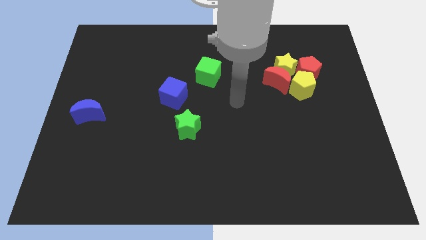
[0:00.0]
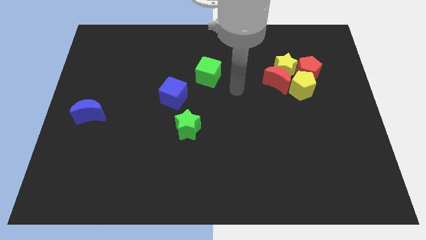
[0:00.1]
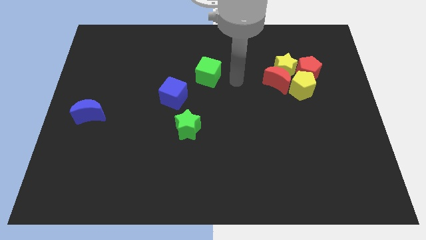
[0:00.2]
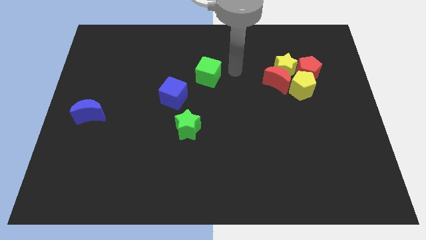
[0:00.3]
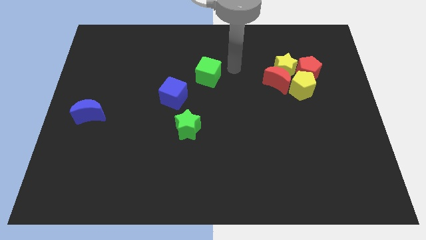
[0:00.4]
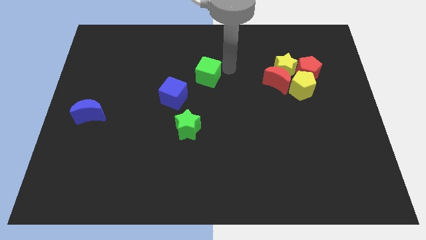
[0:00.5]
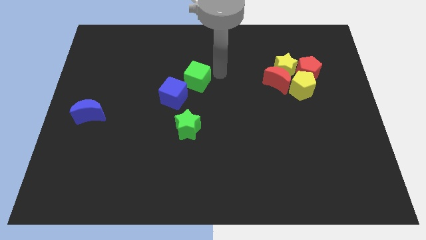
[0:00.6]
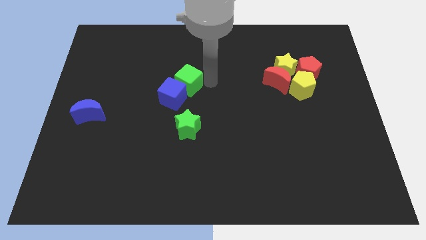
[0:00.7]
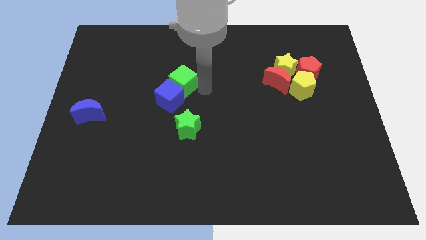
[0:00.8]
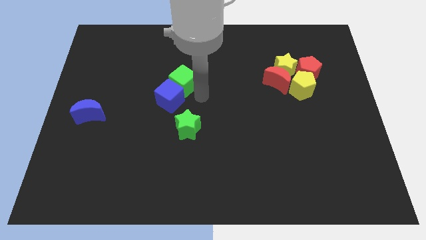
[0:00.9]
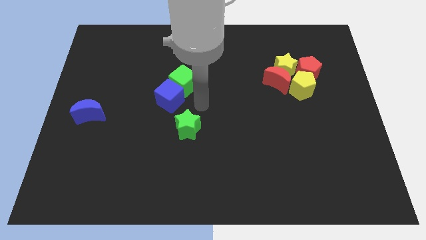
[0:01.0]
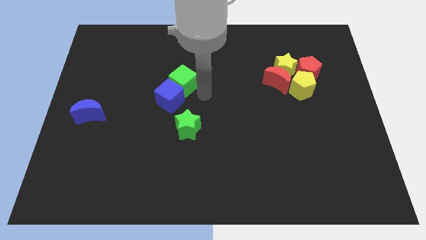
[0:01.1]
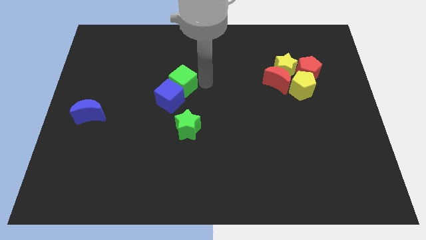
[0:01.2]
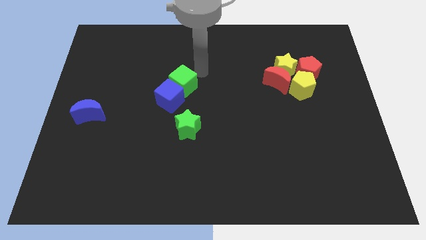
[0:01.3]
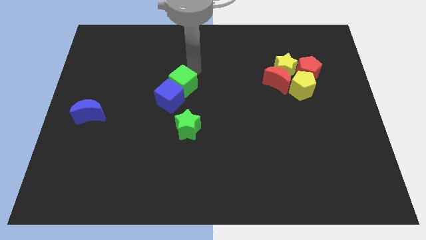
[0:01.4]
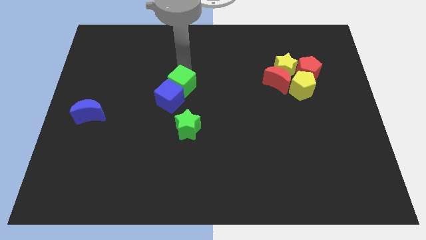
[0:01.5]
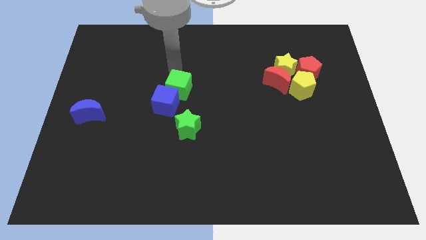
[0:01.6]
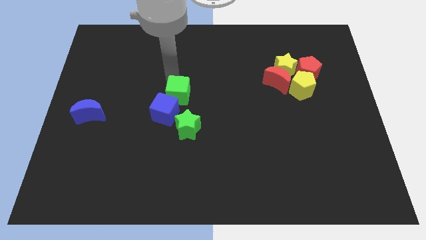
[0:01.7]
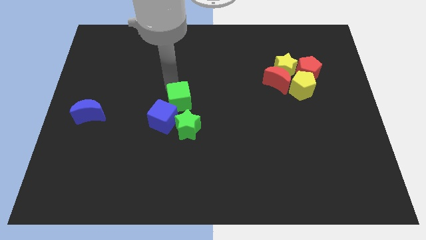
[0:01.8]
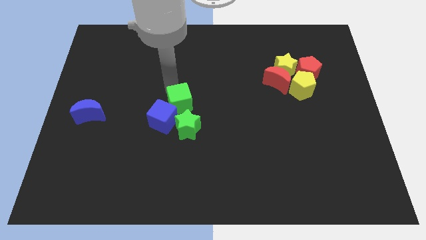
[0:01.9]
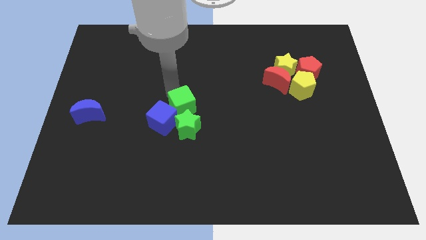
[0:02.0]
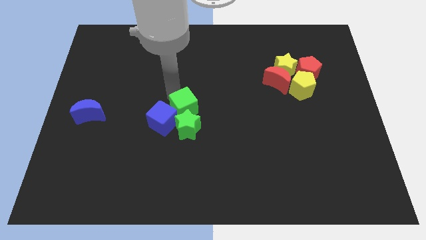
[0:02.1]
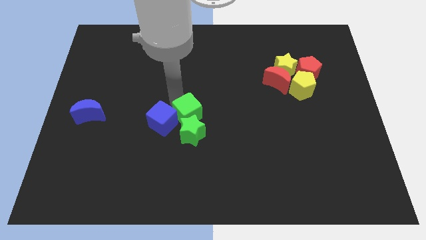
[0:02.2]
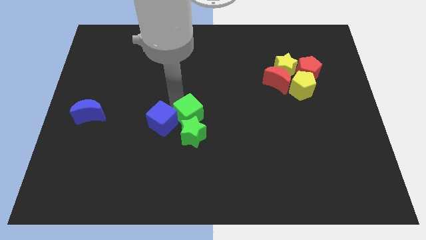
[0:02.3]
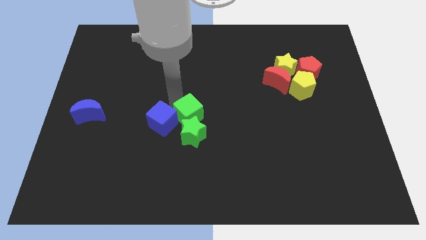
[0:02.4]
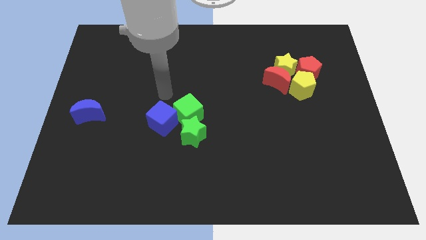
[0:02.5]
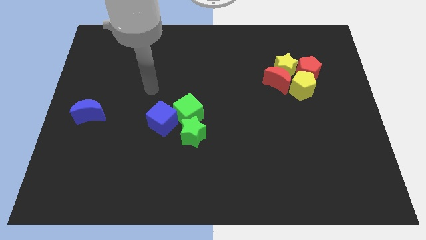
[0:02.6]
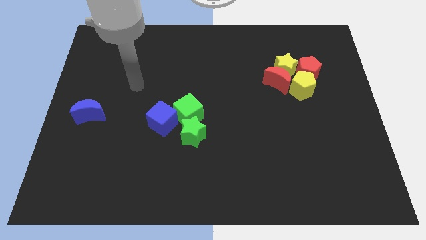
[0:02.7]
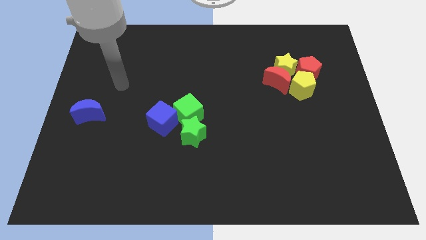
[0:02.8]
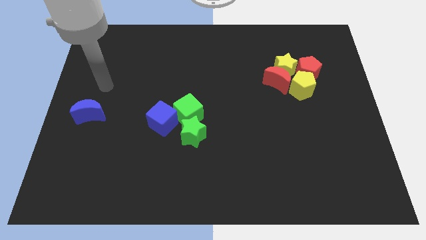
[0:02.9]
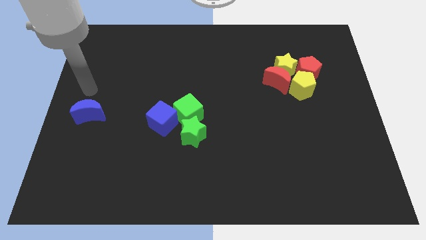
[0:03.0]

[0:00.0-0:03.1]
push the green cube blue cube into the green star

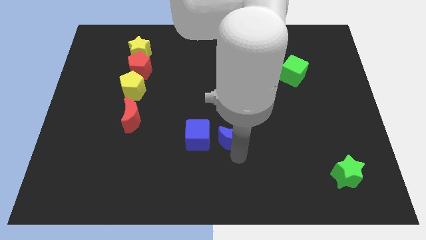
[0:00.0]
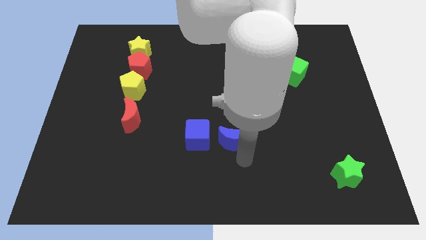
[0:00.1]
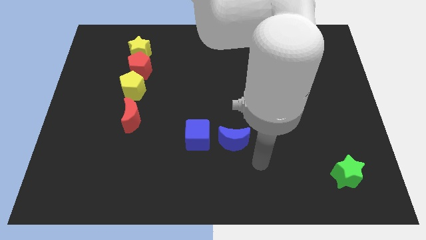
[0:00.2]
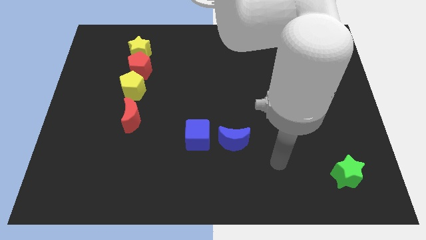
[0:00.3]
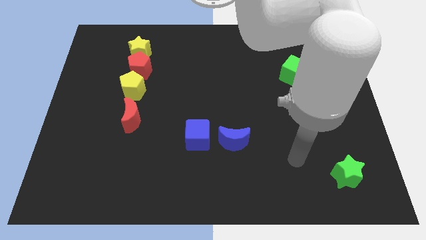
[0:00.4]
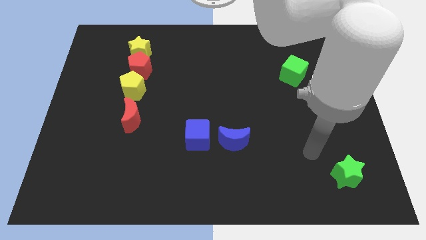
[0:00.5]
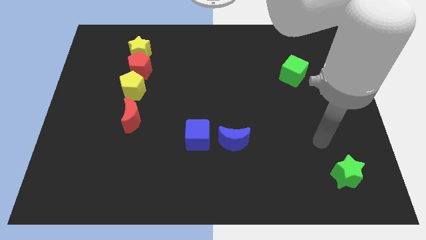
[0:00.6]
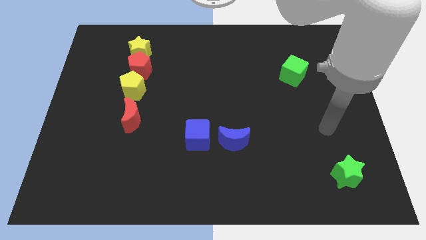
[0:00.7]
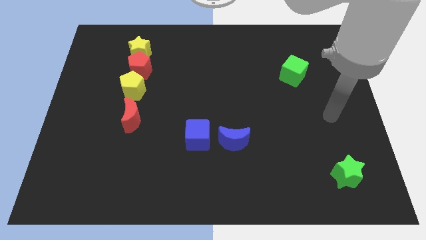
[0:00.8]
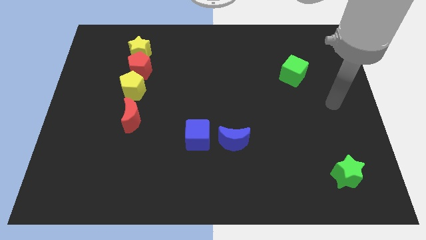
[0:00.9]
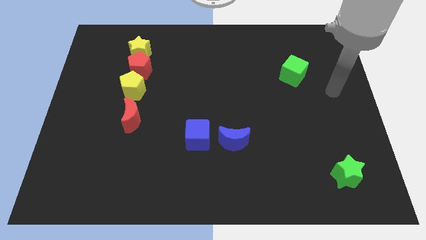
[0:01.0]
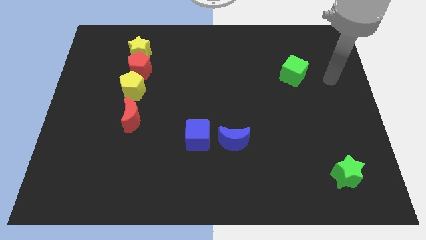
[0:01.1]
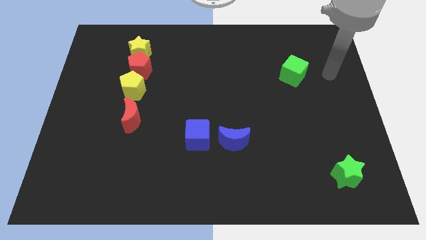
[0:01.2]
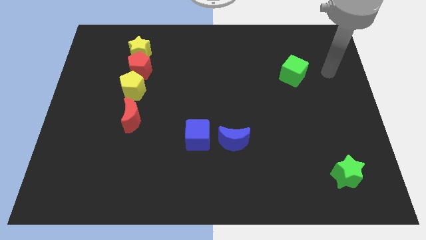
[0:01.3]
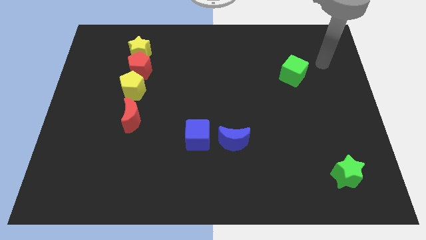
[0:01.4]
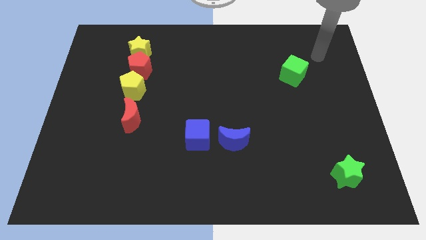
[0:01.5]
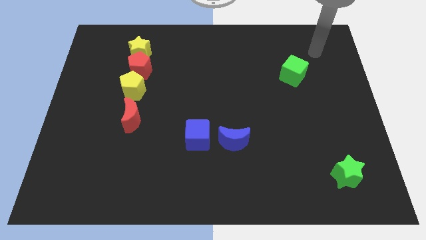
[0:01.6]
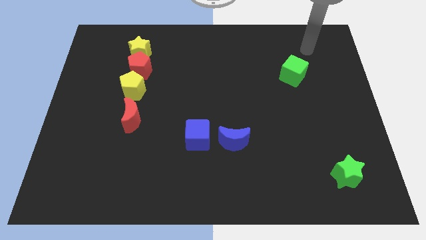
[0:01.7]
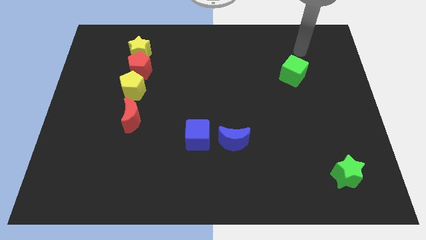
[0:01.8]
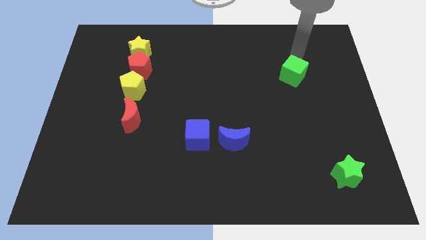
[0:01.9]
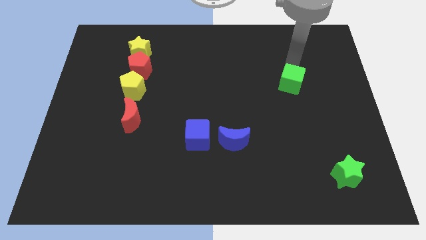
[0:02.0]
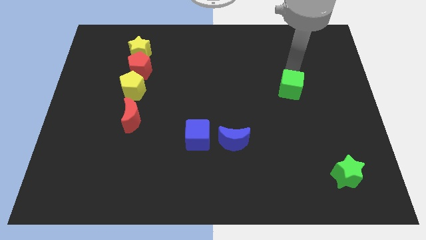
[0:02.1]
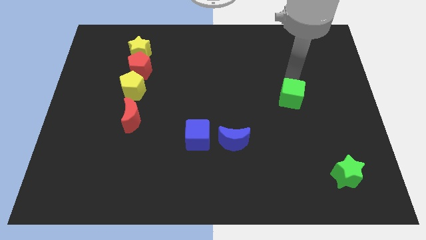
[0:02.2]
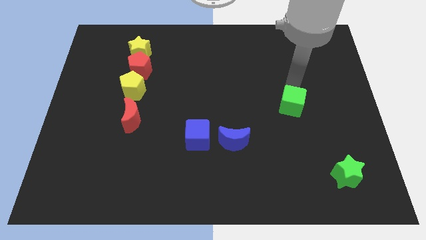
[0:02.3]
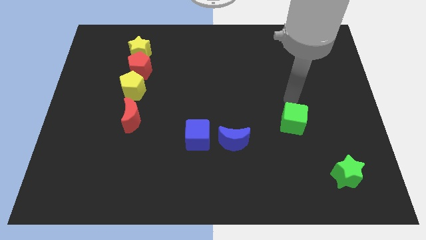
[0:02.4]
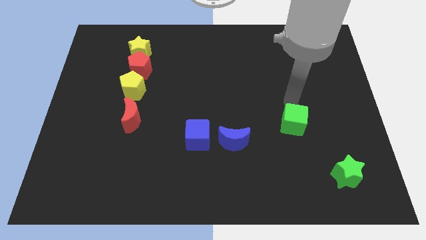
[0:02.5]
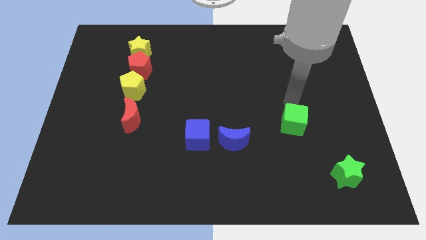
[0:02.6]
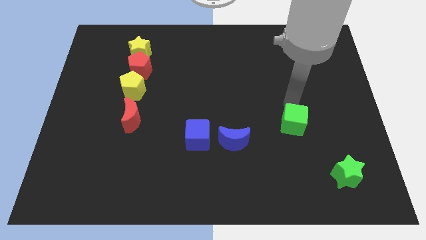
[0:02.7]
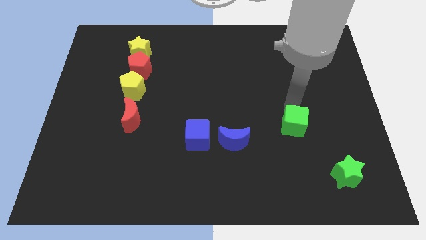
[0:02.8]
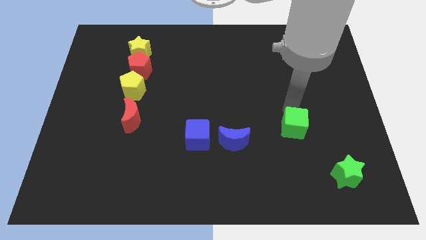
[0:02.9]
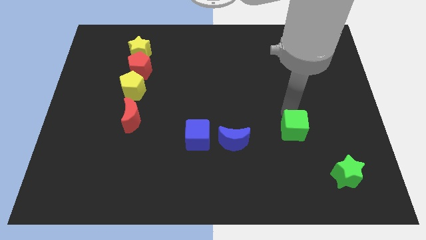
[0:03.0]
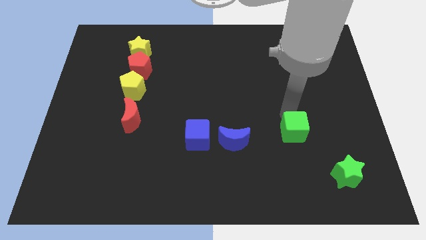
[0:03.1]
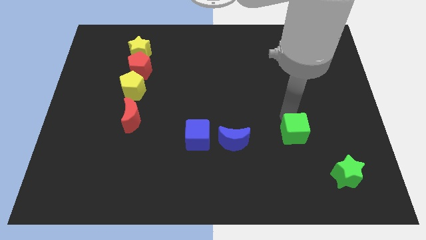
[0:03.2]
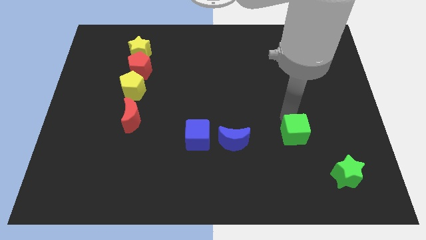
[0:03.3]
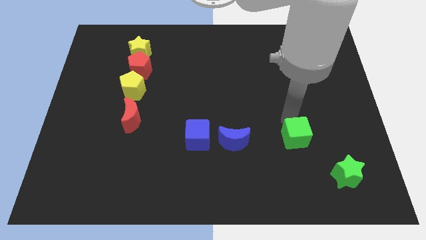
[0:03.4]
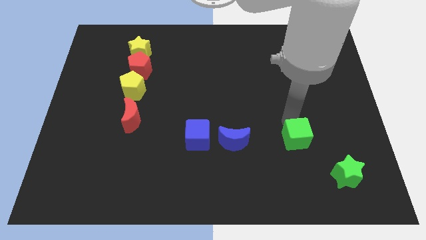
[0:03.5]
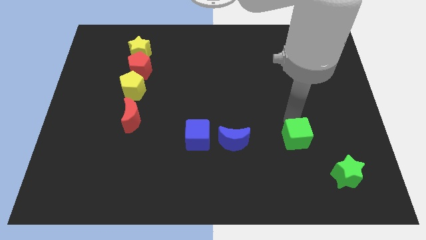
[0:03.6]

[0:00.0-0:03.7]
place green cube to the right of blue moon

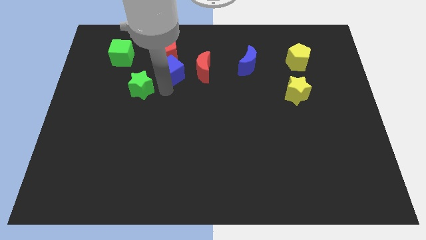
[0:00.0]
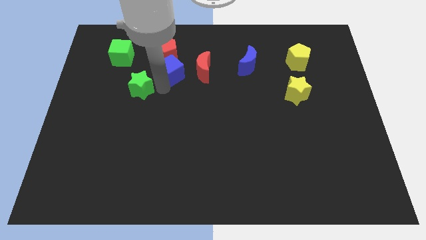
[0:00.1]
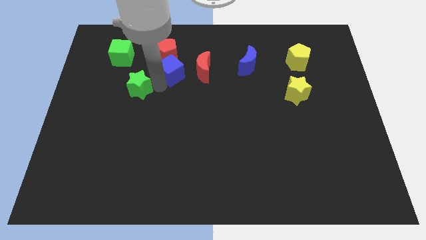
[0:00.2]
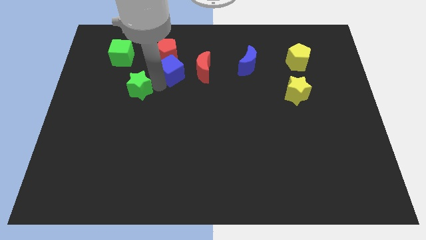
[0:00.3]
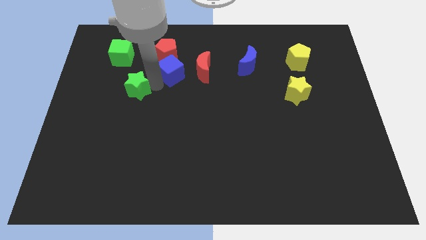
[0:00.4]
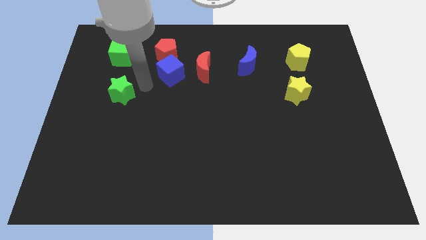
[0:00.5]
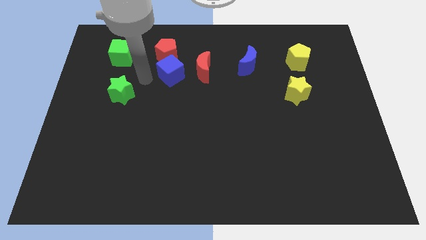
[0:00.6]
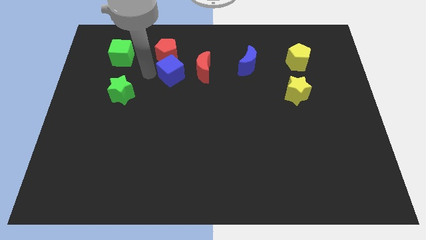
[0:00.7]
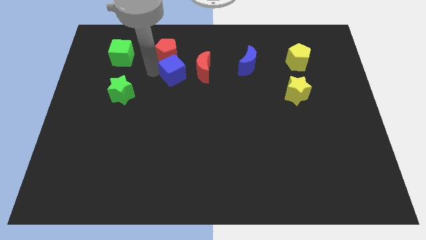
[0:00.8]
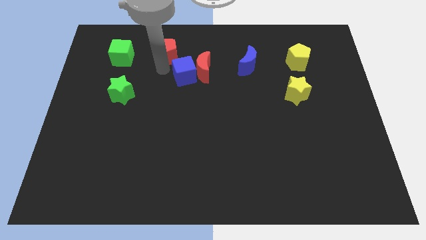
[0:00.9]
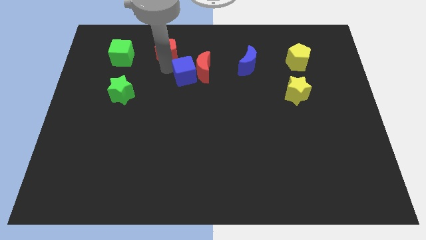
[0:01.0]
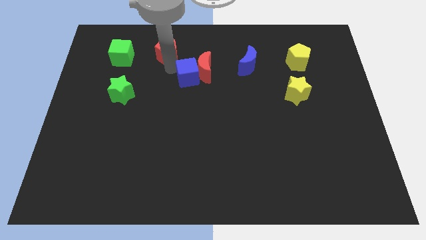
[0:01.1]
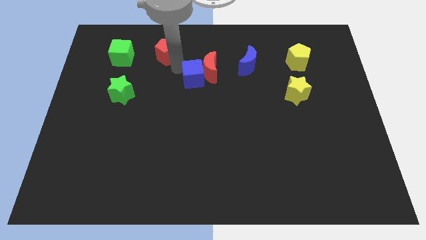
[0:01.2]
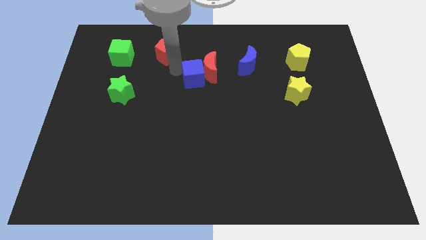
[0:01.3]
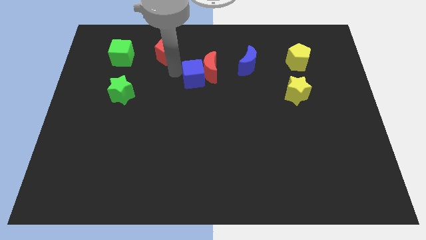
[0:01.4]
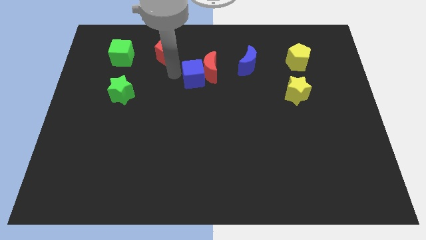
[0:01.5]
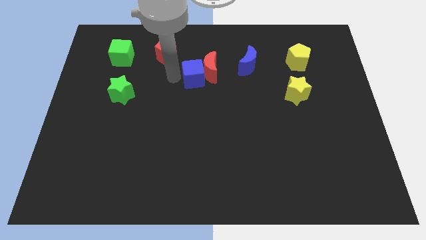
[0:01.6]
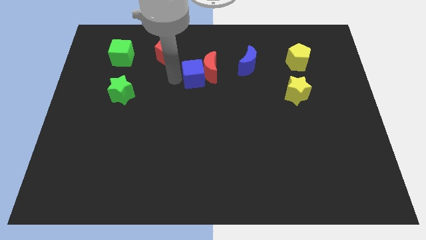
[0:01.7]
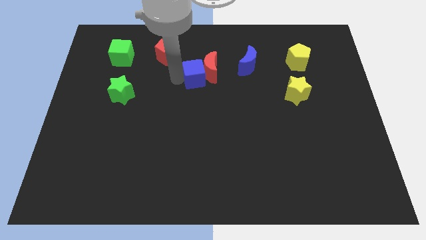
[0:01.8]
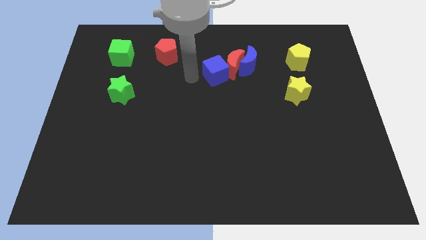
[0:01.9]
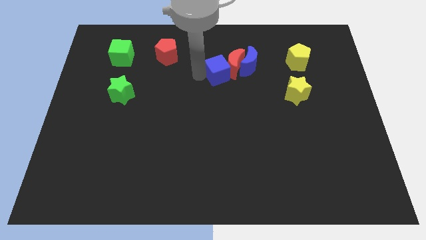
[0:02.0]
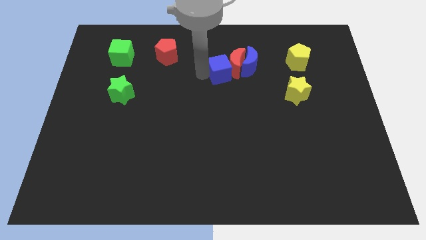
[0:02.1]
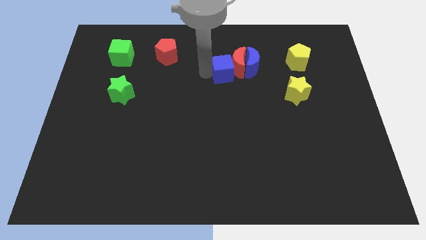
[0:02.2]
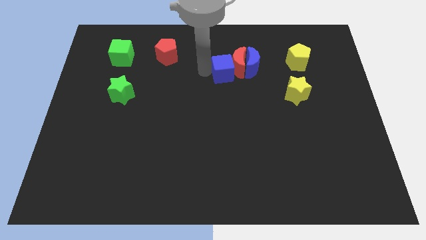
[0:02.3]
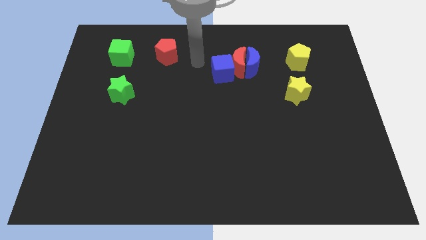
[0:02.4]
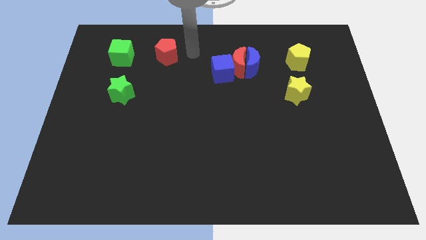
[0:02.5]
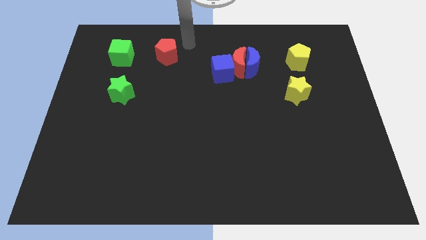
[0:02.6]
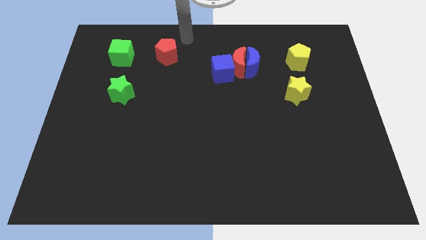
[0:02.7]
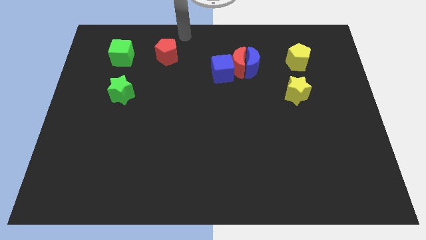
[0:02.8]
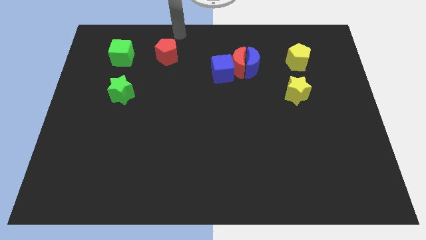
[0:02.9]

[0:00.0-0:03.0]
push blue cube near to red half moon
